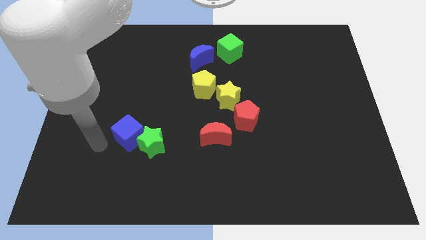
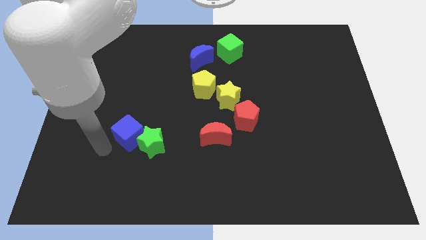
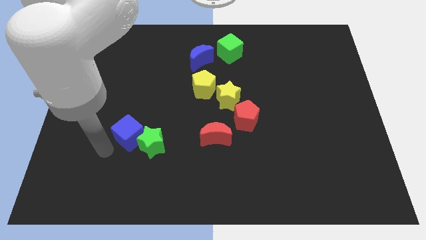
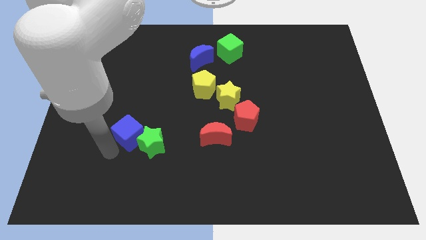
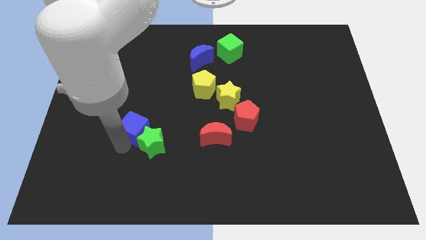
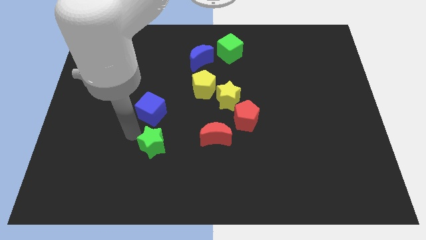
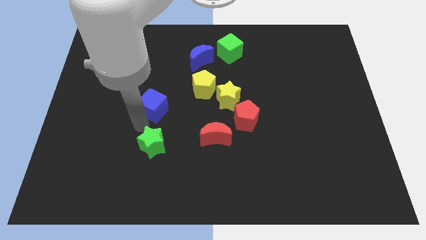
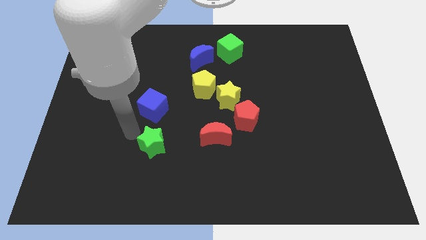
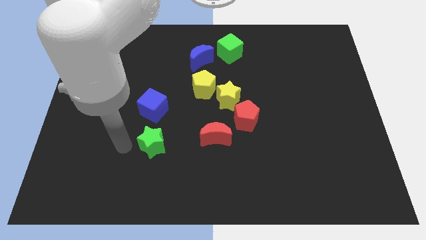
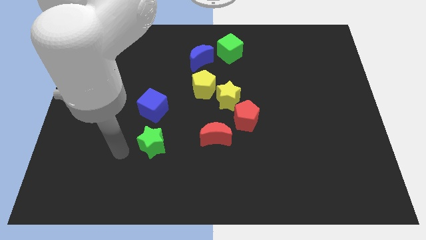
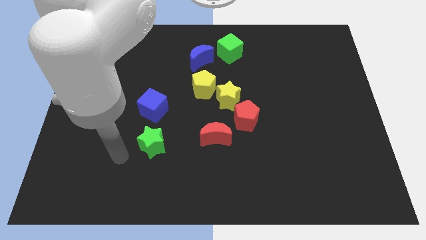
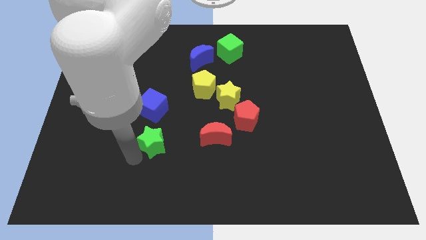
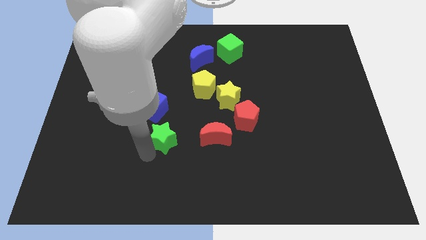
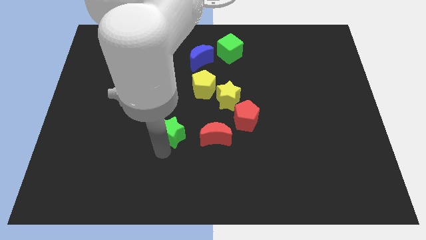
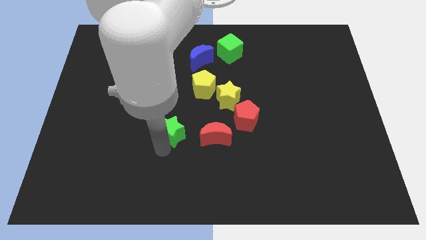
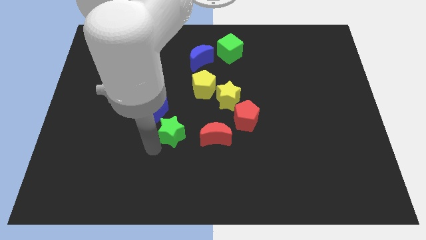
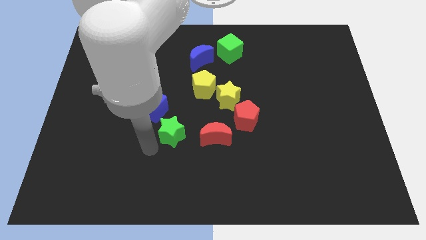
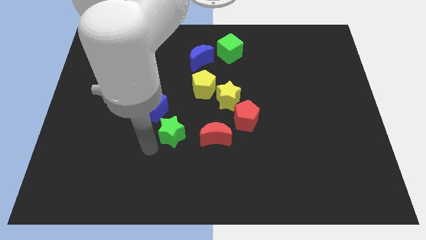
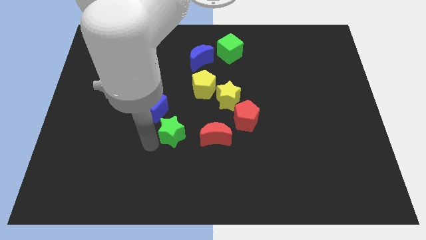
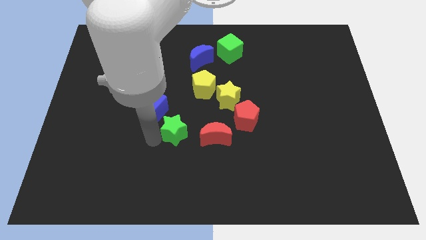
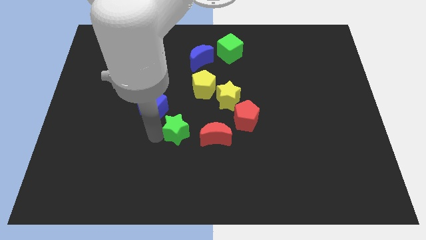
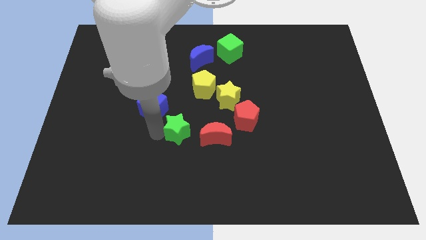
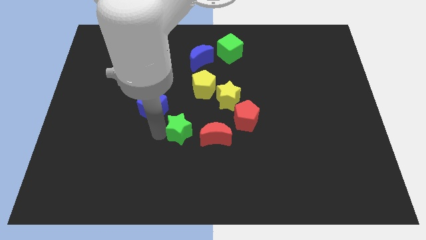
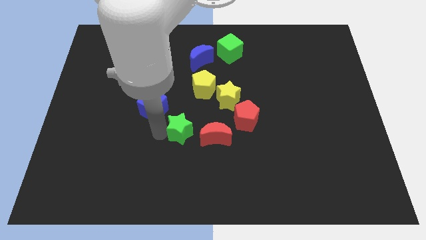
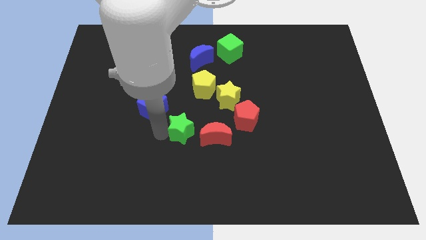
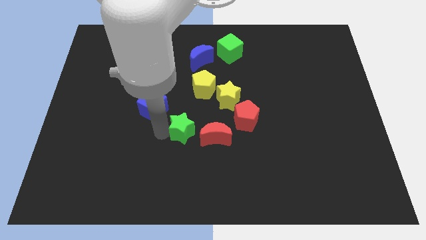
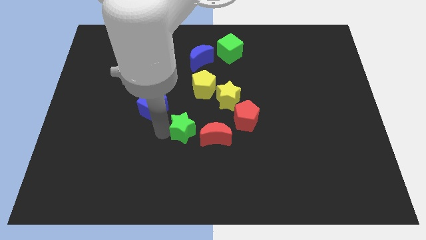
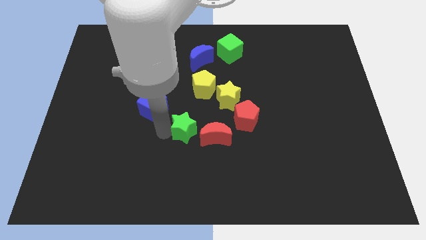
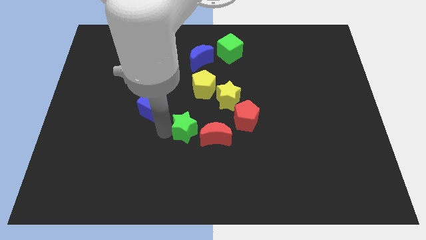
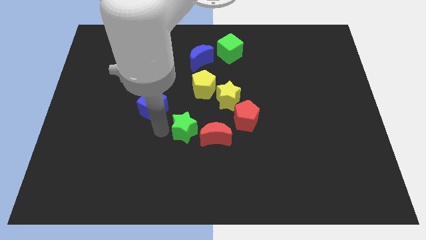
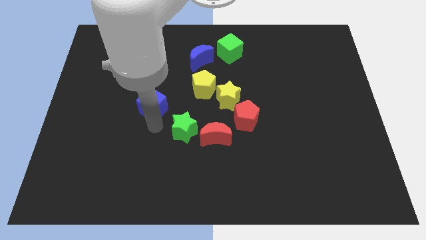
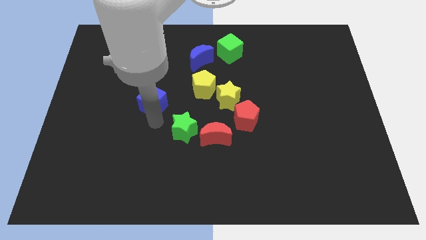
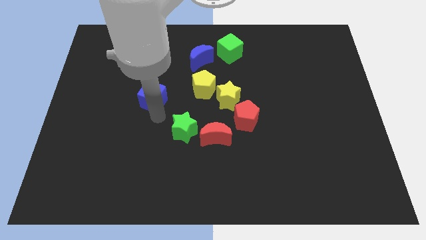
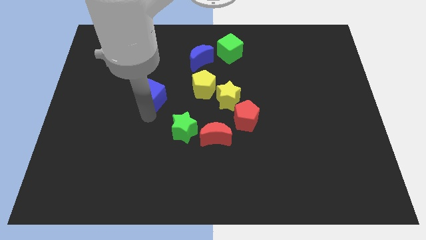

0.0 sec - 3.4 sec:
move the cube and the green star slightly upward

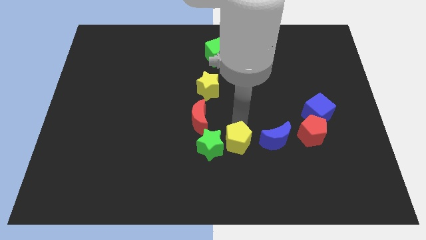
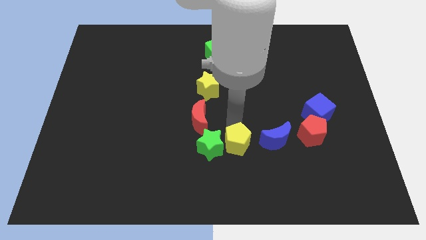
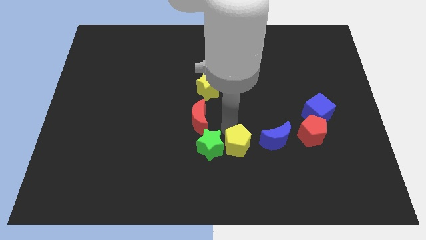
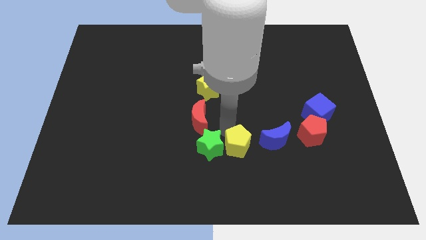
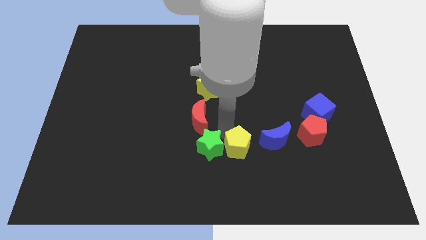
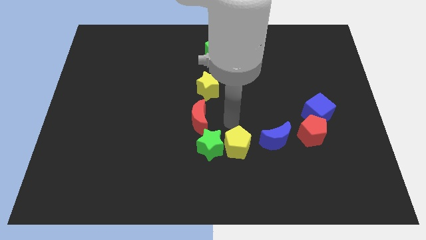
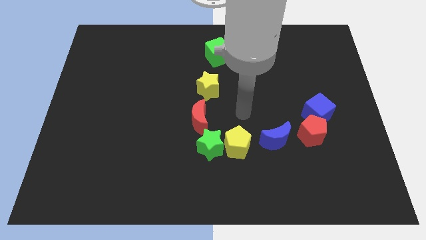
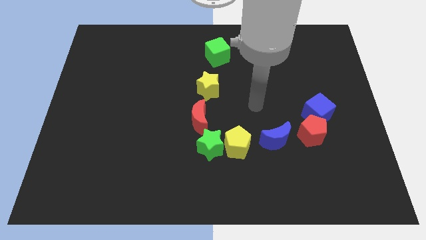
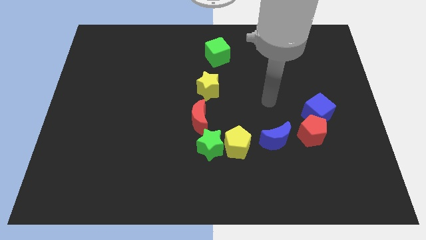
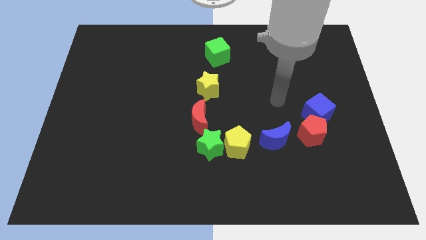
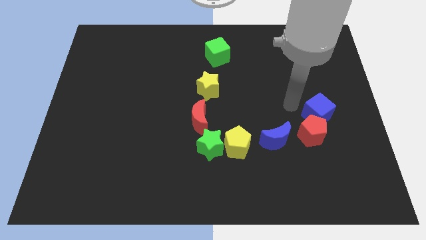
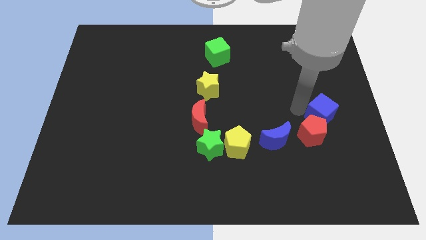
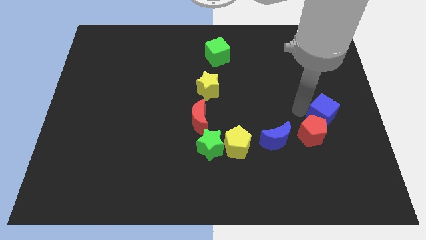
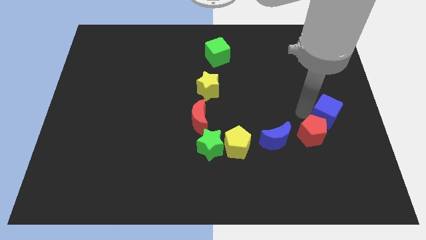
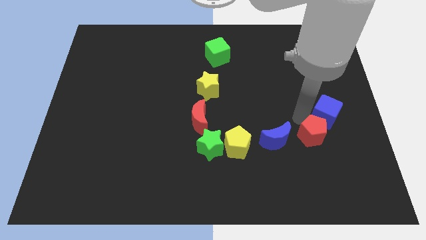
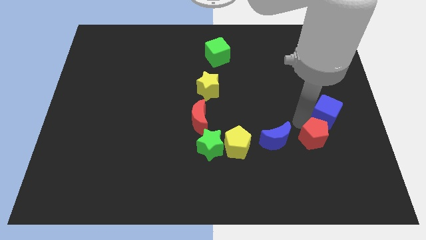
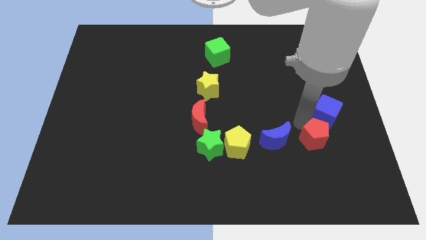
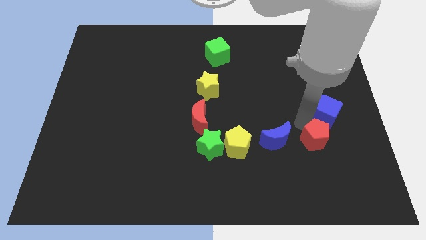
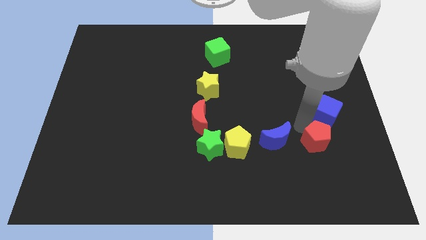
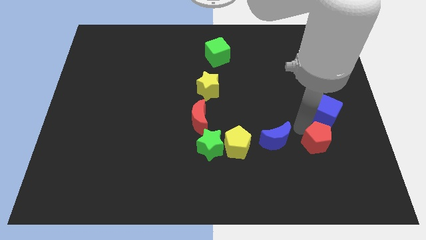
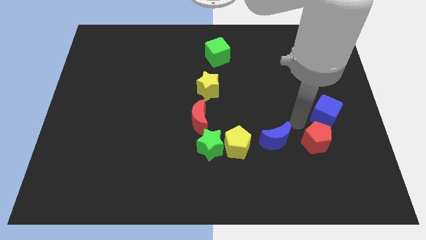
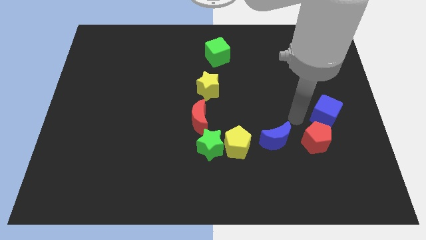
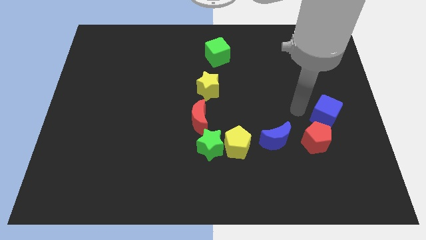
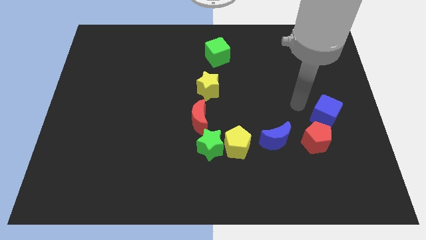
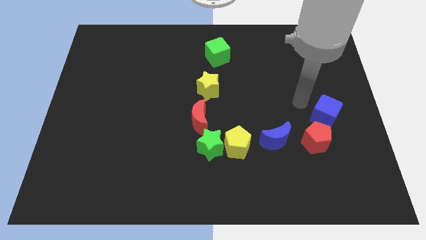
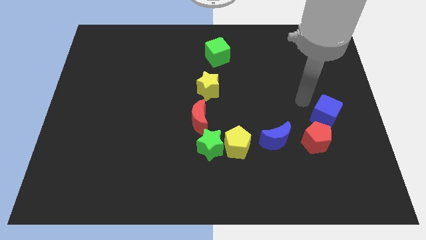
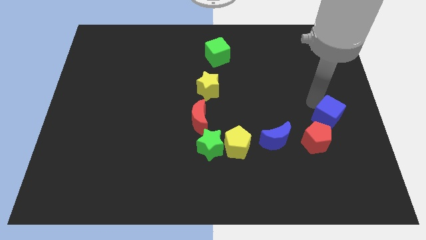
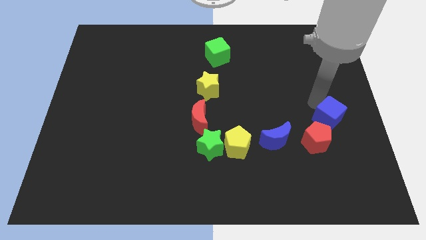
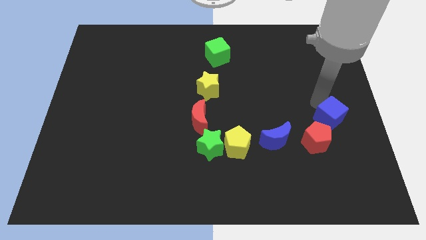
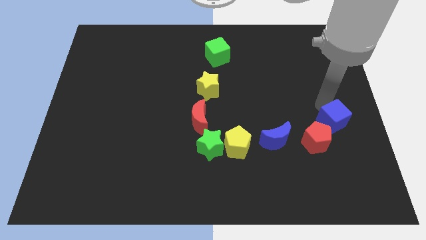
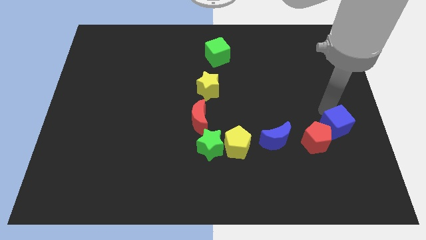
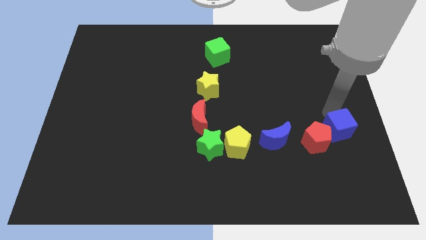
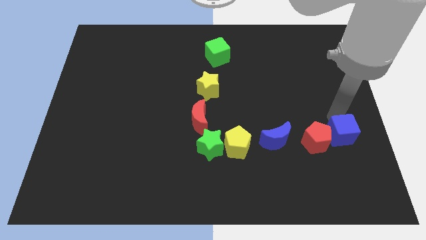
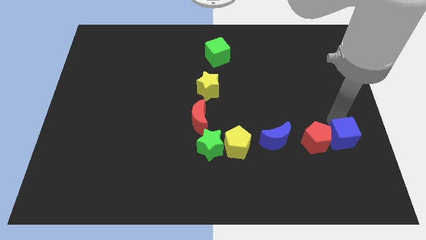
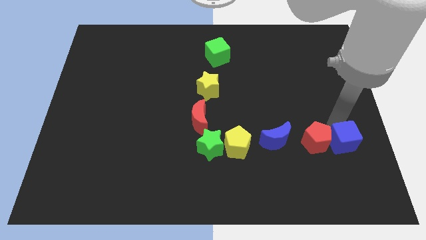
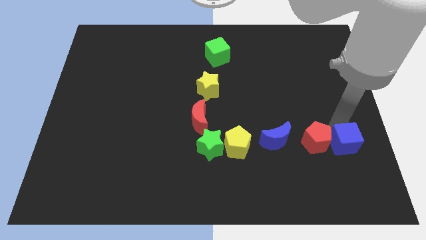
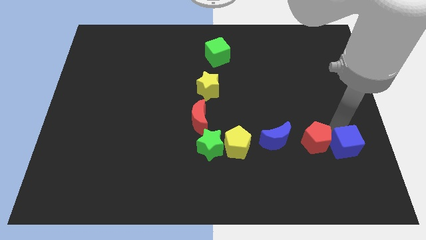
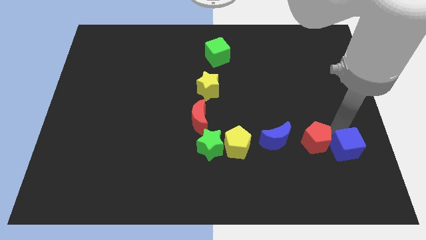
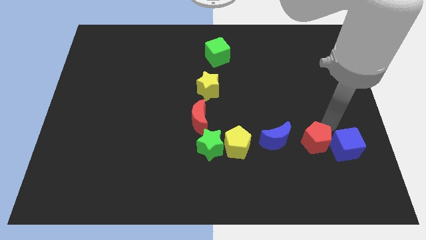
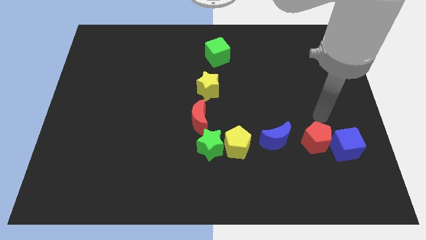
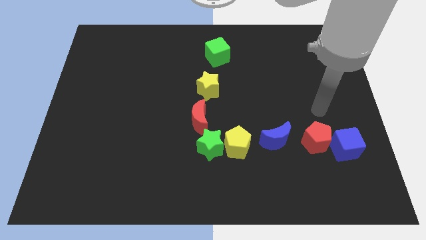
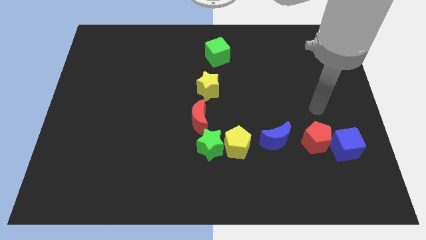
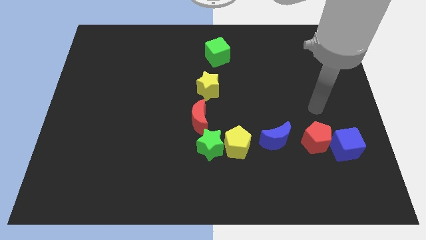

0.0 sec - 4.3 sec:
slightly push the red pentagon towards down

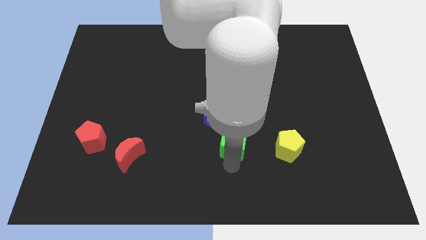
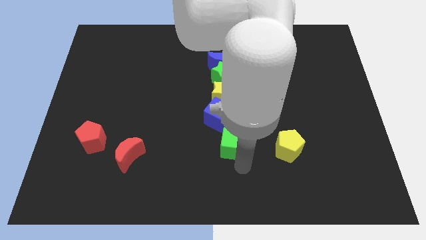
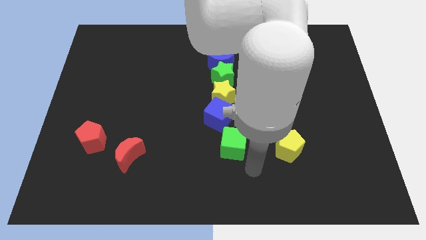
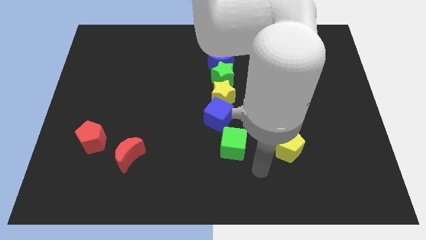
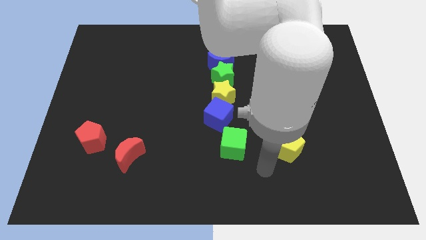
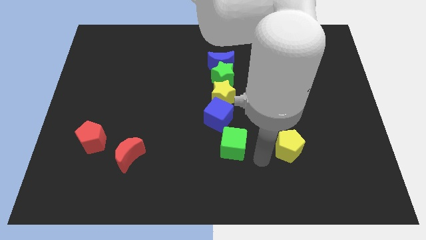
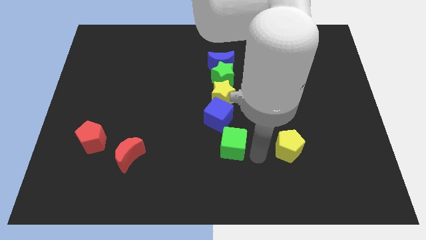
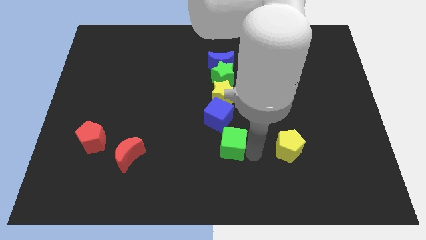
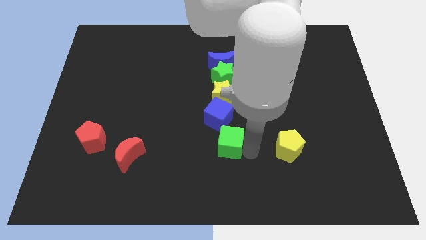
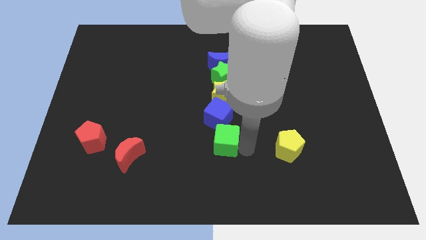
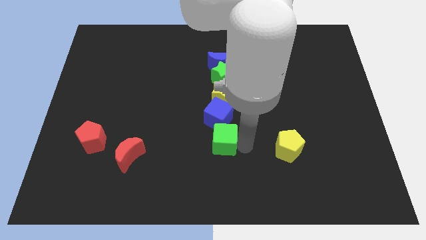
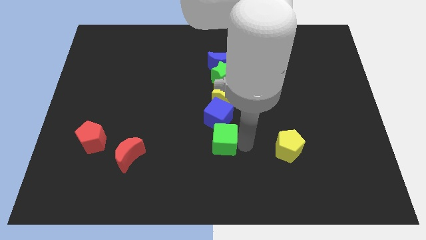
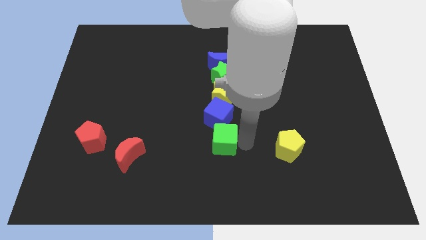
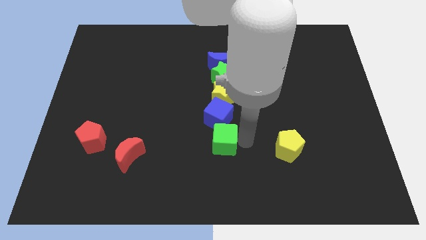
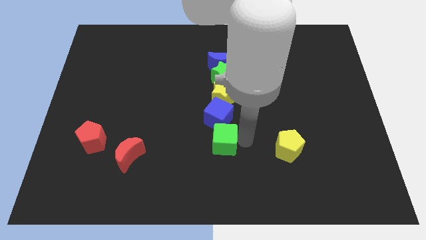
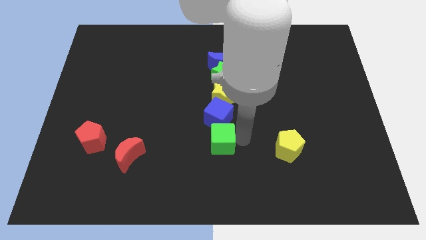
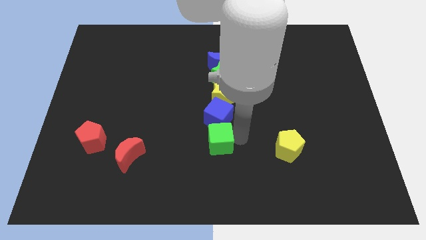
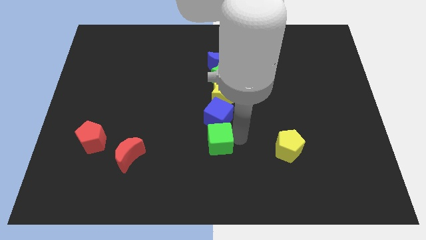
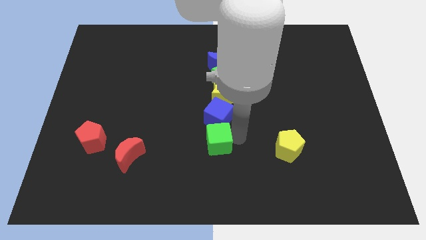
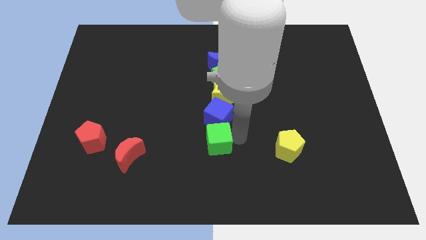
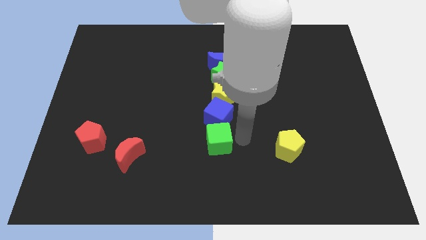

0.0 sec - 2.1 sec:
move the green cube to the bottom of the blue cube
